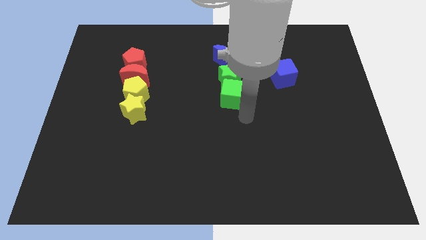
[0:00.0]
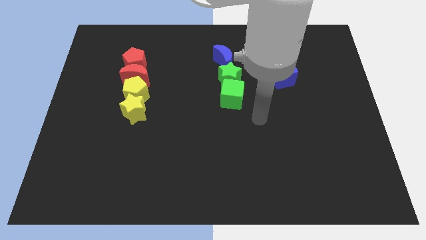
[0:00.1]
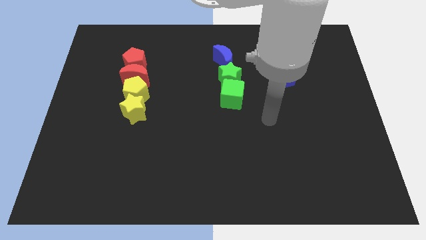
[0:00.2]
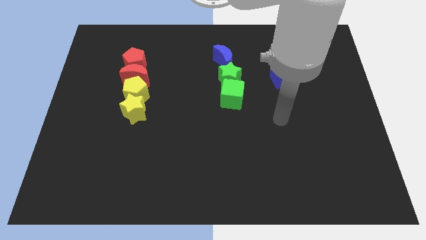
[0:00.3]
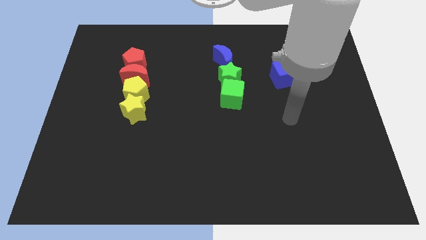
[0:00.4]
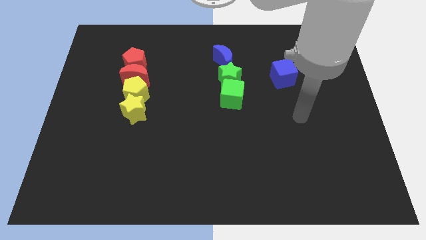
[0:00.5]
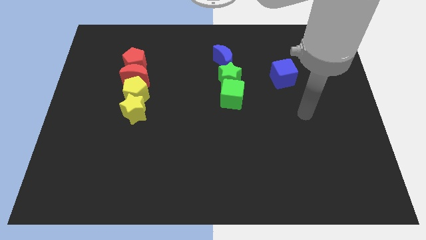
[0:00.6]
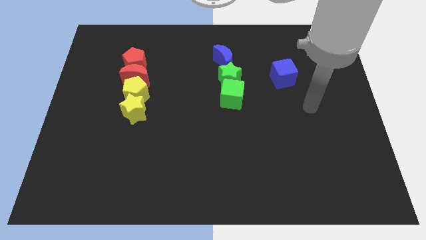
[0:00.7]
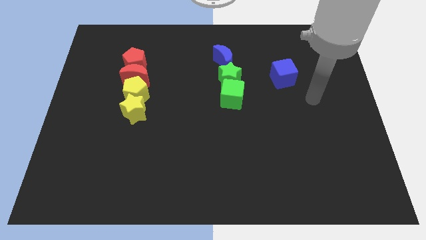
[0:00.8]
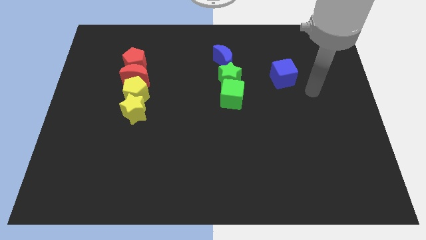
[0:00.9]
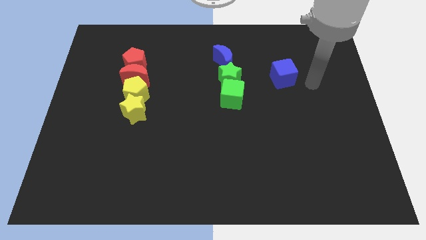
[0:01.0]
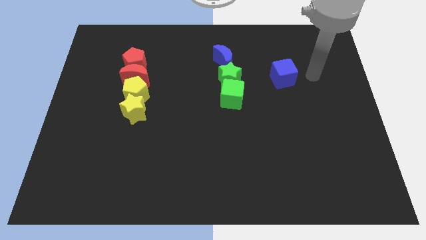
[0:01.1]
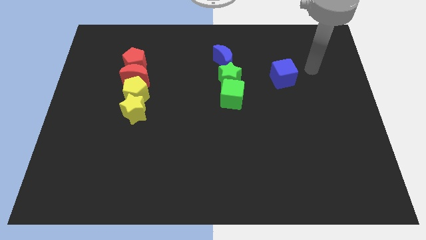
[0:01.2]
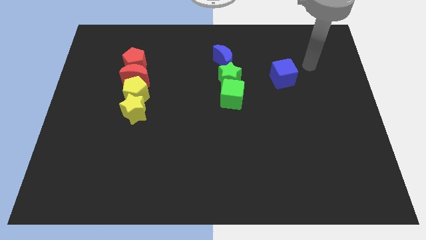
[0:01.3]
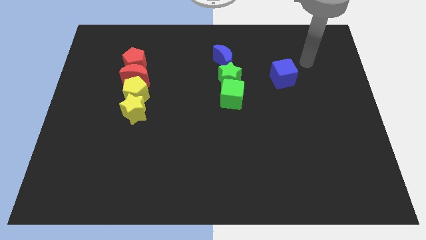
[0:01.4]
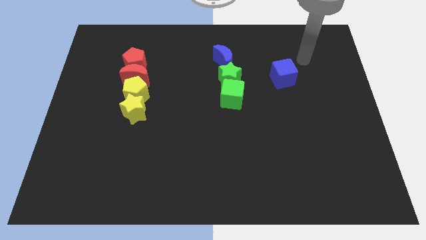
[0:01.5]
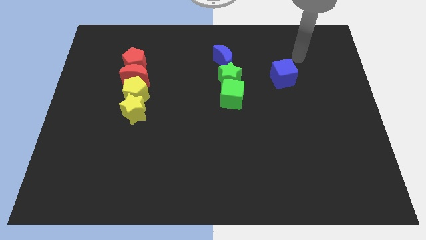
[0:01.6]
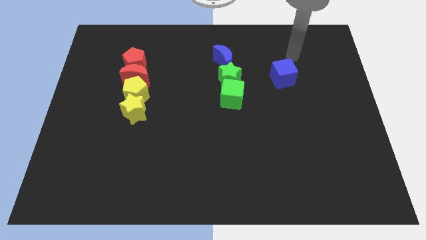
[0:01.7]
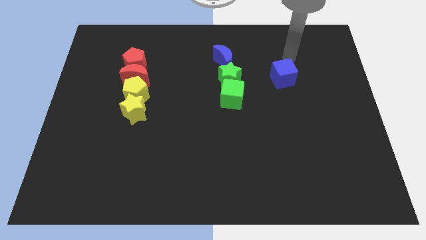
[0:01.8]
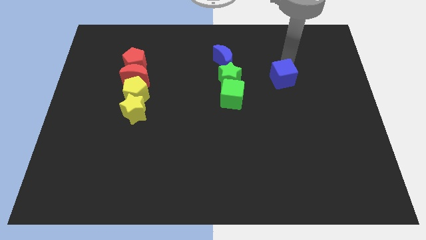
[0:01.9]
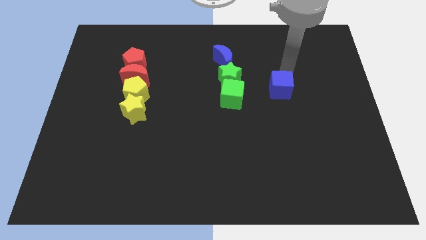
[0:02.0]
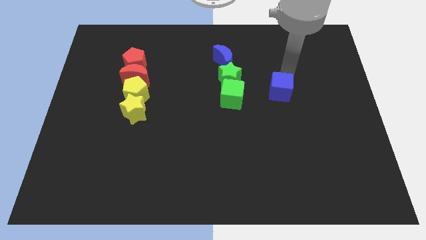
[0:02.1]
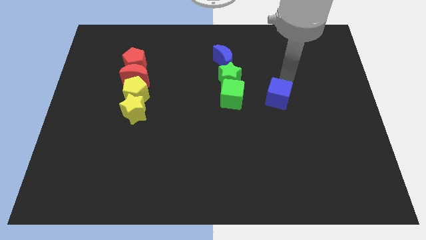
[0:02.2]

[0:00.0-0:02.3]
place the blue cube right to the green cube

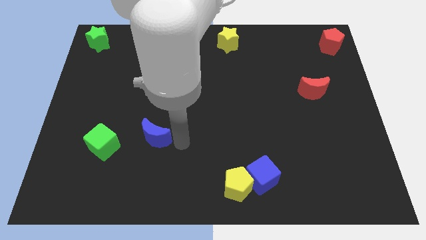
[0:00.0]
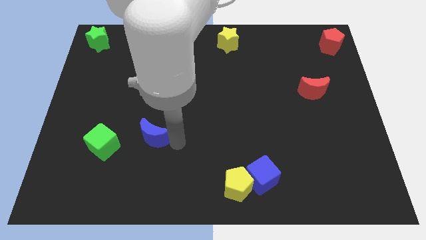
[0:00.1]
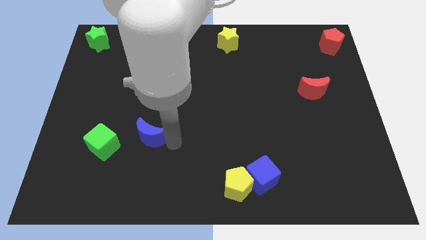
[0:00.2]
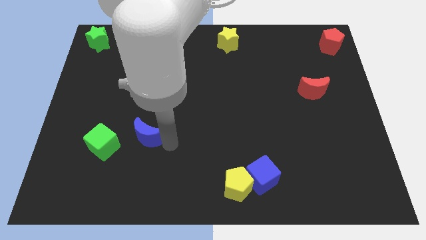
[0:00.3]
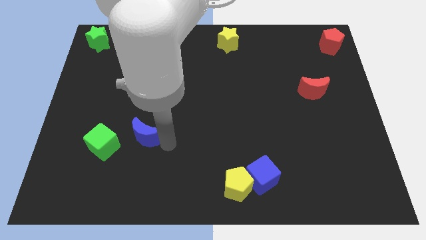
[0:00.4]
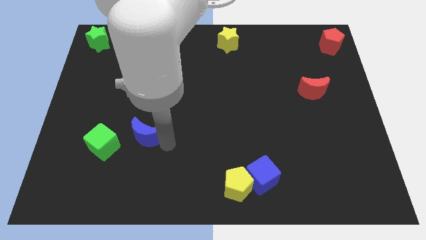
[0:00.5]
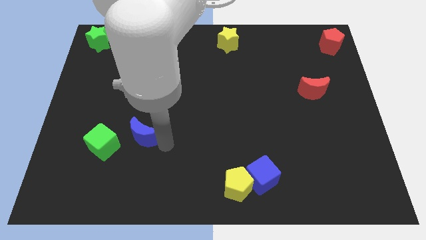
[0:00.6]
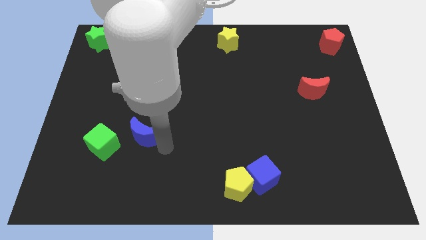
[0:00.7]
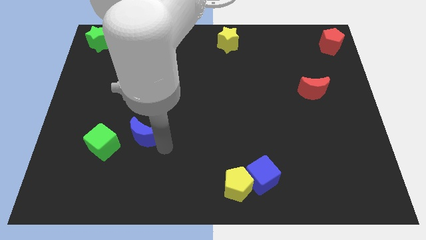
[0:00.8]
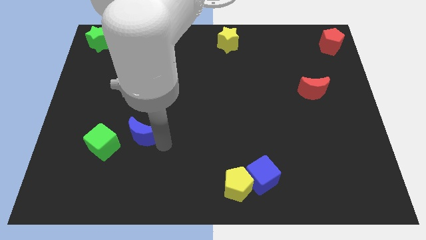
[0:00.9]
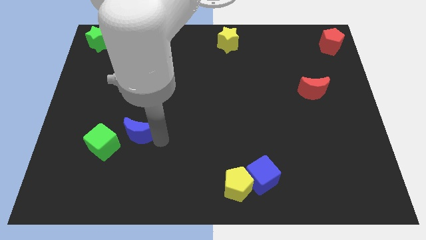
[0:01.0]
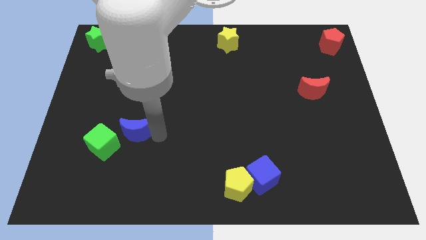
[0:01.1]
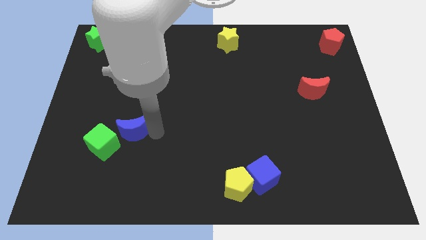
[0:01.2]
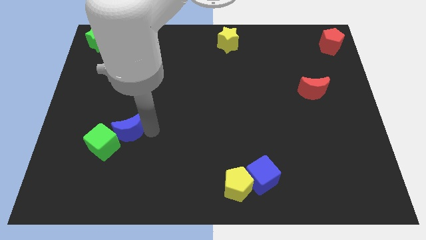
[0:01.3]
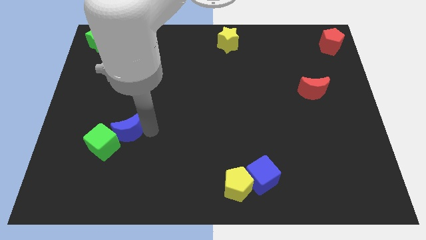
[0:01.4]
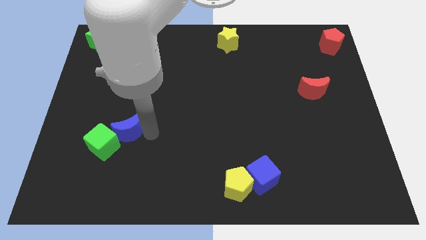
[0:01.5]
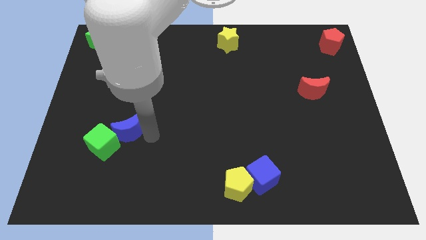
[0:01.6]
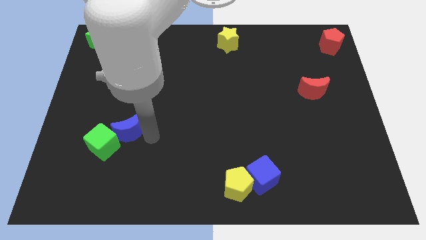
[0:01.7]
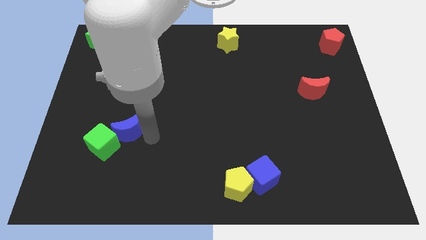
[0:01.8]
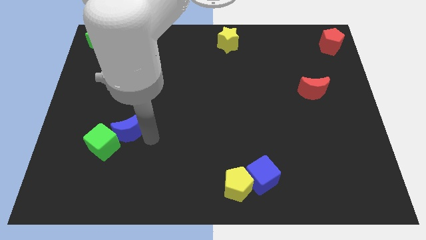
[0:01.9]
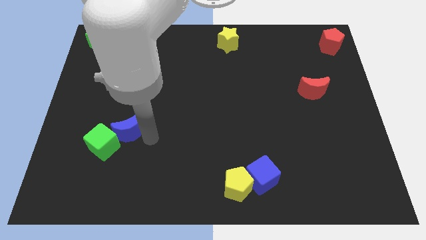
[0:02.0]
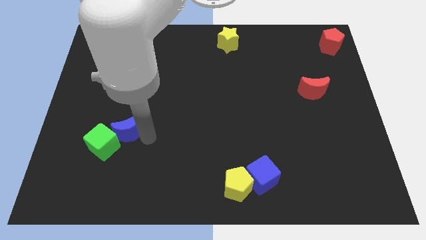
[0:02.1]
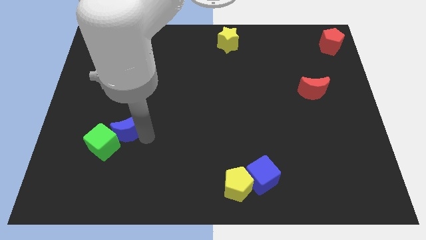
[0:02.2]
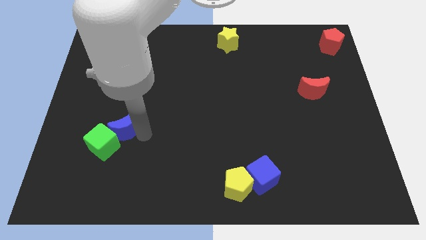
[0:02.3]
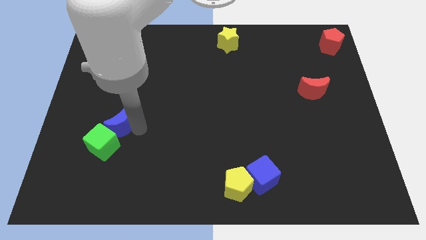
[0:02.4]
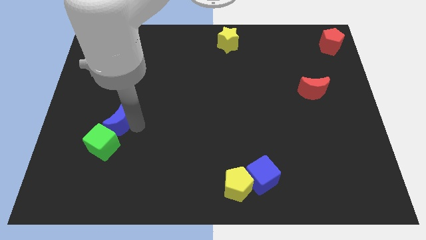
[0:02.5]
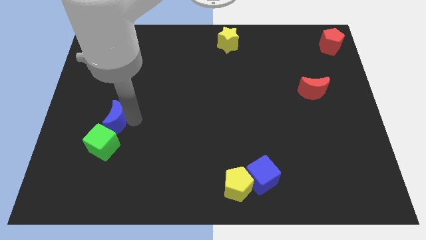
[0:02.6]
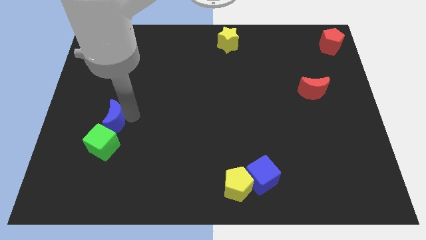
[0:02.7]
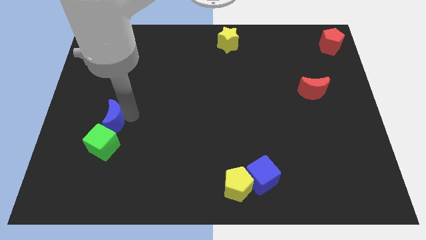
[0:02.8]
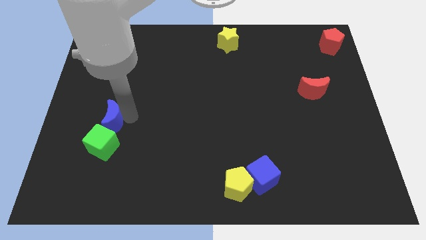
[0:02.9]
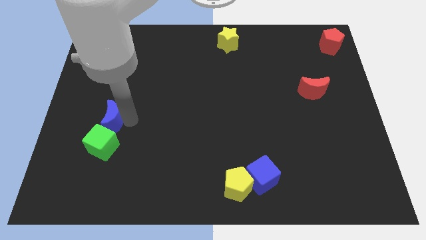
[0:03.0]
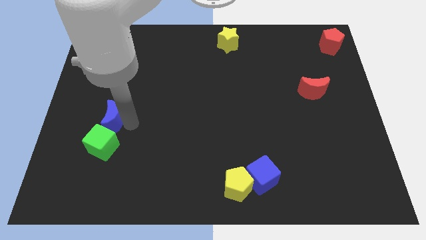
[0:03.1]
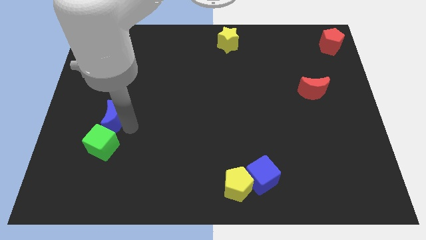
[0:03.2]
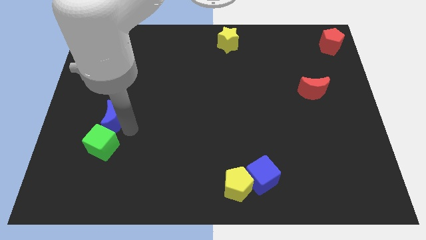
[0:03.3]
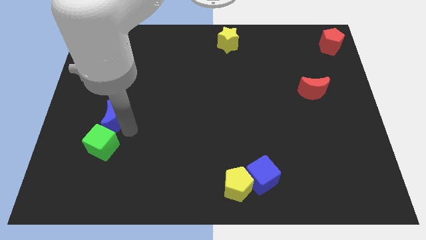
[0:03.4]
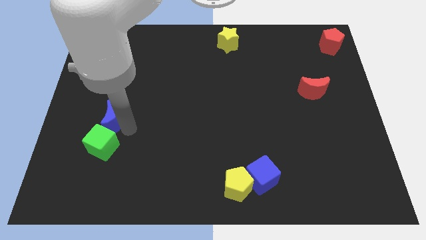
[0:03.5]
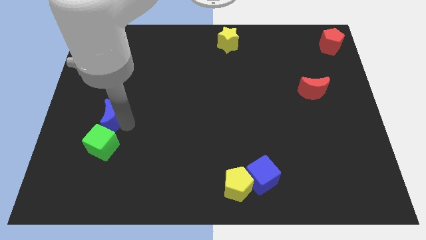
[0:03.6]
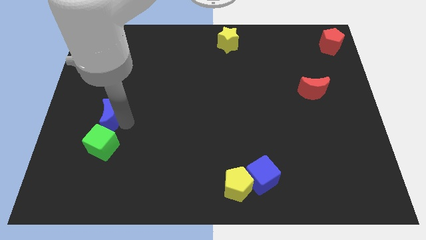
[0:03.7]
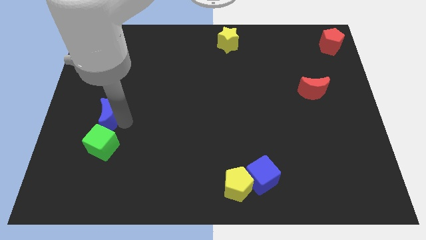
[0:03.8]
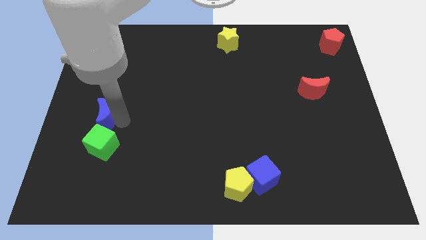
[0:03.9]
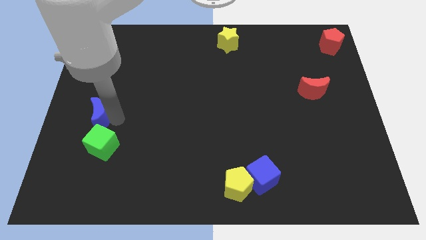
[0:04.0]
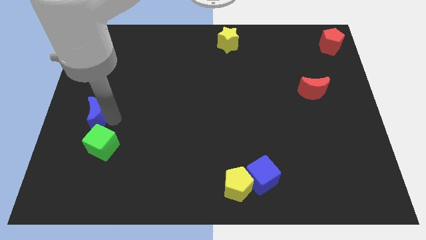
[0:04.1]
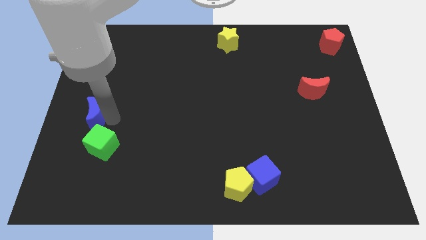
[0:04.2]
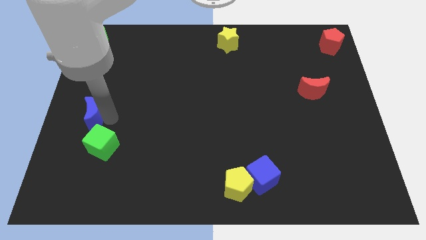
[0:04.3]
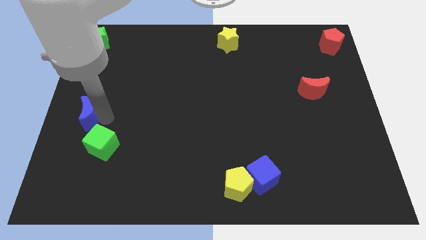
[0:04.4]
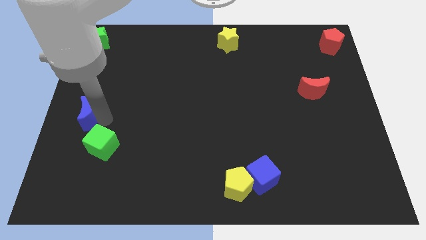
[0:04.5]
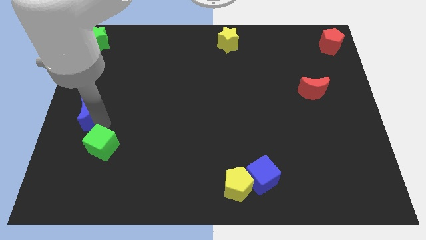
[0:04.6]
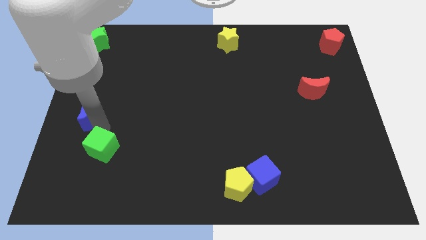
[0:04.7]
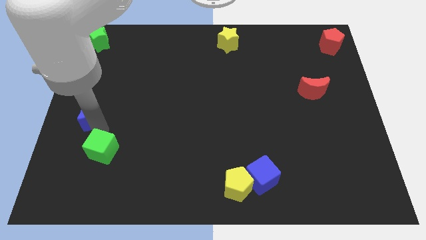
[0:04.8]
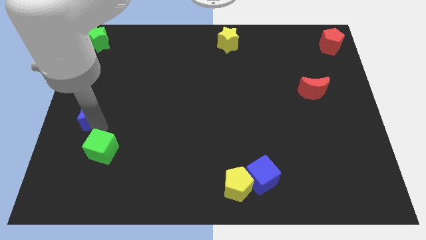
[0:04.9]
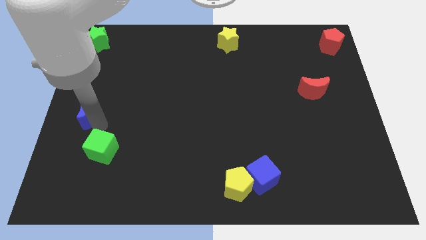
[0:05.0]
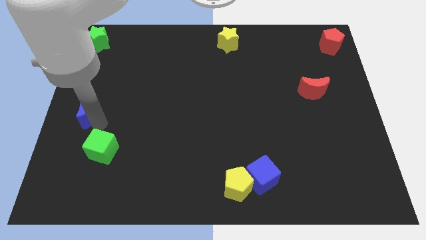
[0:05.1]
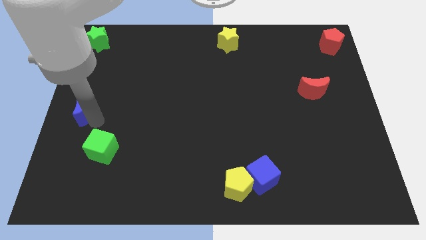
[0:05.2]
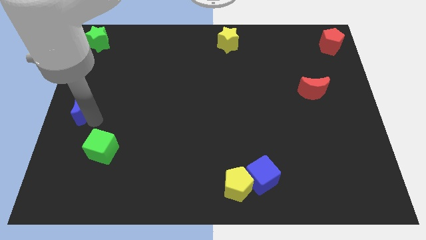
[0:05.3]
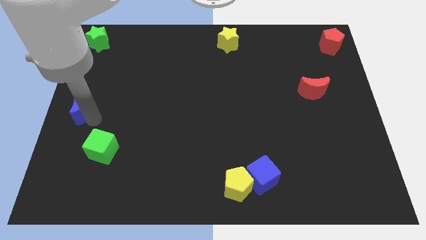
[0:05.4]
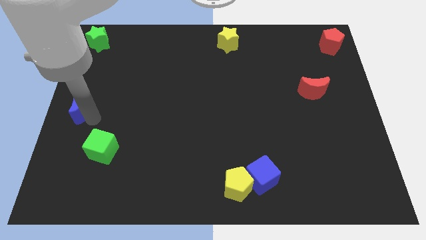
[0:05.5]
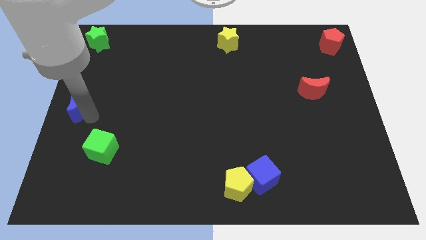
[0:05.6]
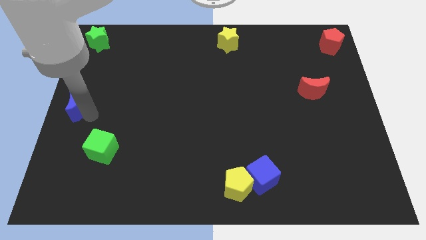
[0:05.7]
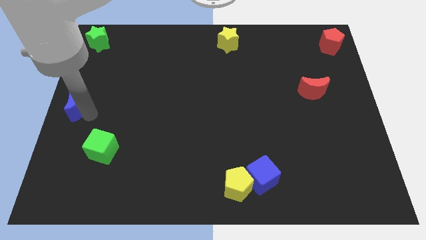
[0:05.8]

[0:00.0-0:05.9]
place the blue crescent on the left center of the board

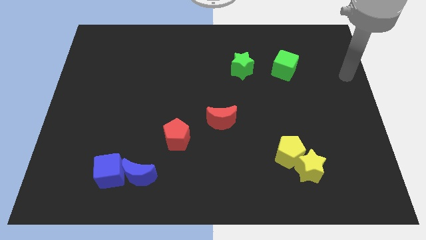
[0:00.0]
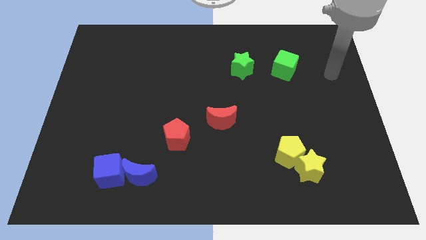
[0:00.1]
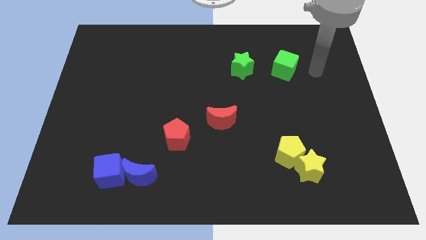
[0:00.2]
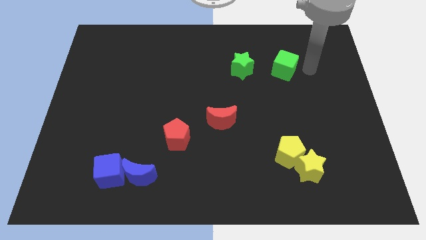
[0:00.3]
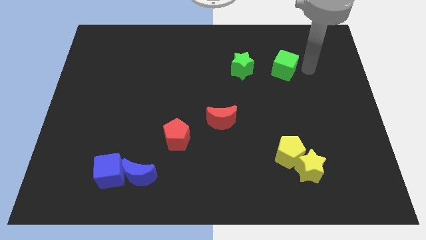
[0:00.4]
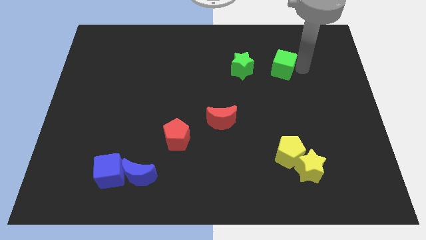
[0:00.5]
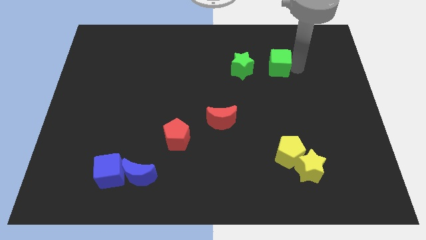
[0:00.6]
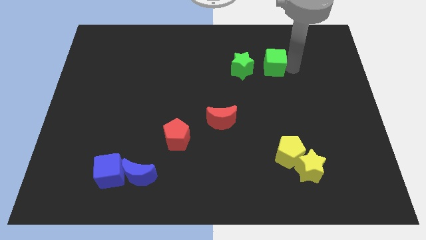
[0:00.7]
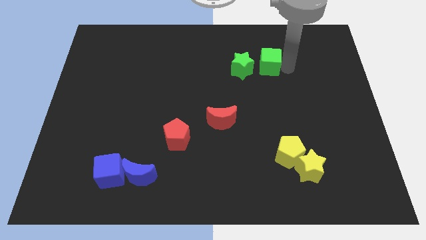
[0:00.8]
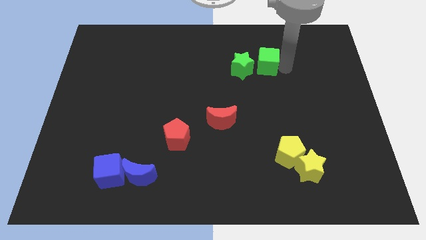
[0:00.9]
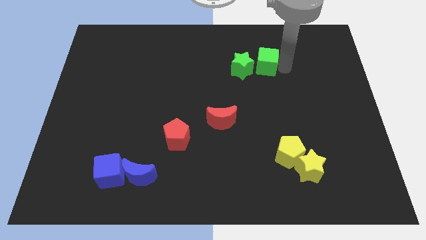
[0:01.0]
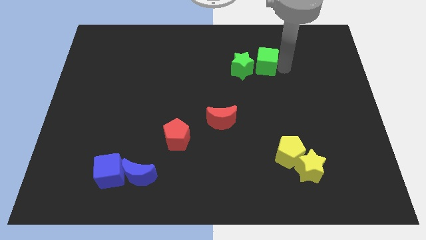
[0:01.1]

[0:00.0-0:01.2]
push green cube near green star

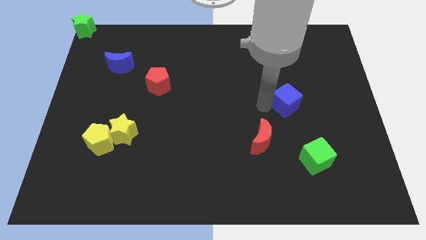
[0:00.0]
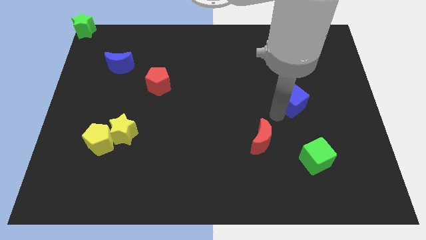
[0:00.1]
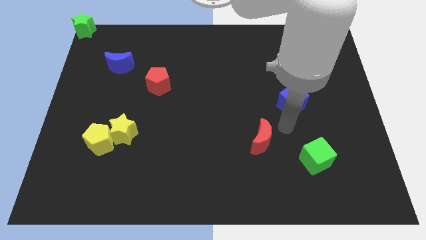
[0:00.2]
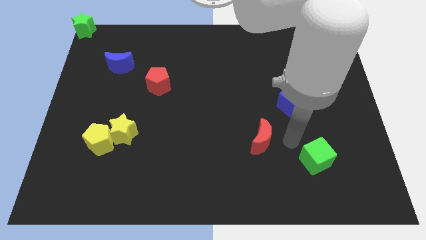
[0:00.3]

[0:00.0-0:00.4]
push the blue cube slightly to the right to the red crescent
